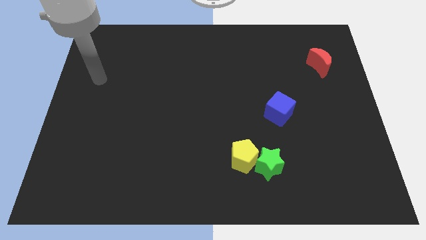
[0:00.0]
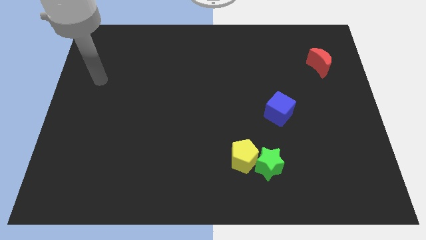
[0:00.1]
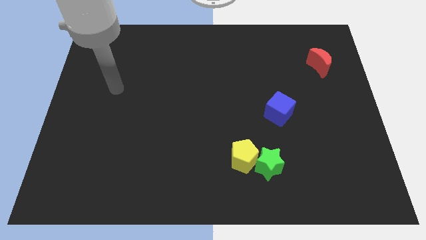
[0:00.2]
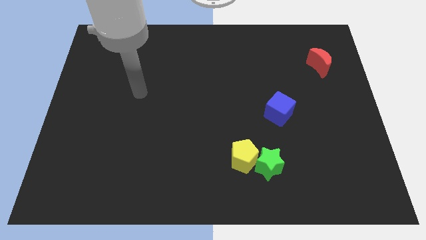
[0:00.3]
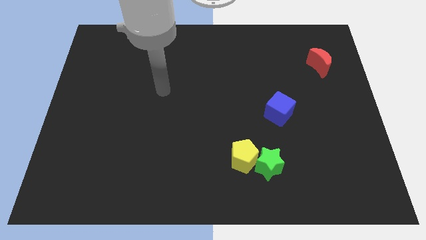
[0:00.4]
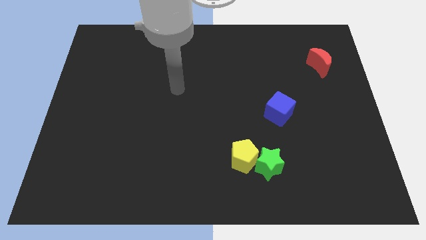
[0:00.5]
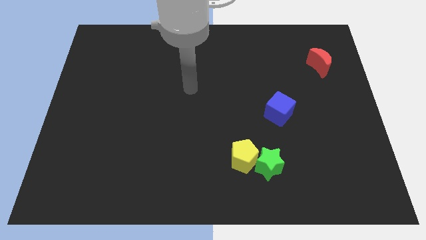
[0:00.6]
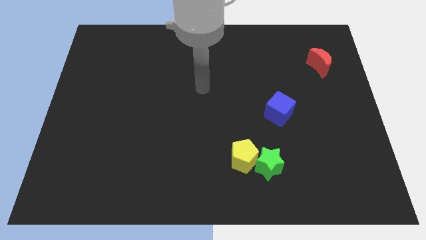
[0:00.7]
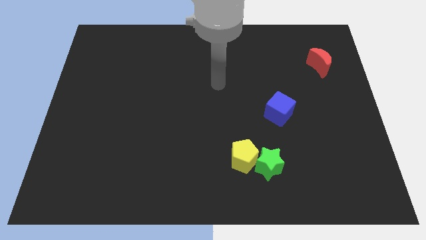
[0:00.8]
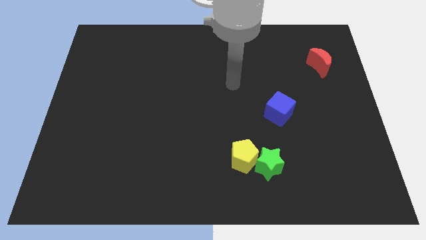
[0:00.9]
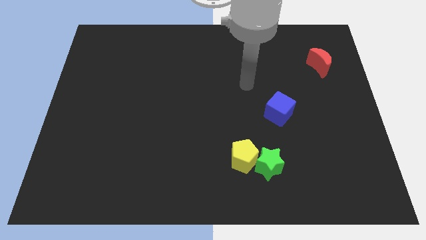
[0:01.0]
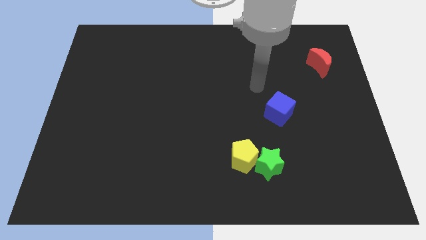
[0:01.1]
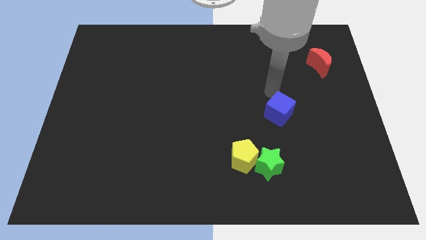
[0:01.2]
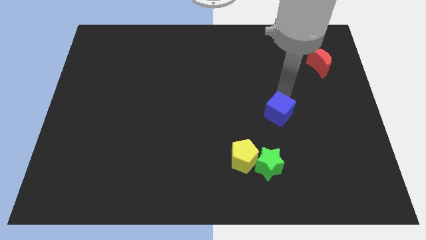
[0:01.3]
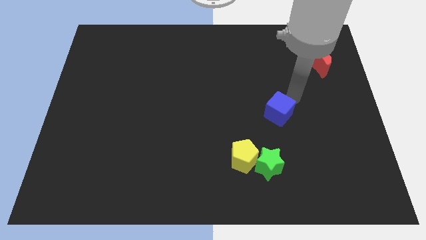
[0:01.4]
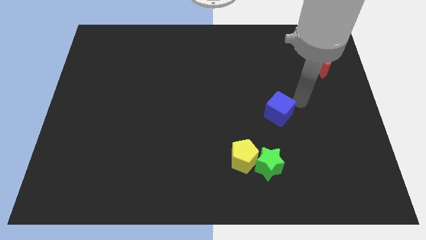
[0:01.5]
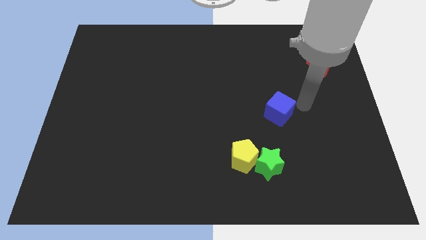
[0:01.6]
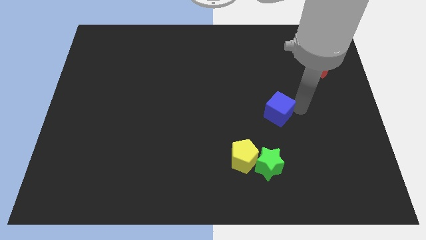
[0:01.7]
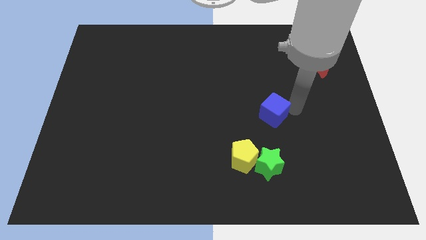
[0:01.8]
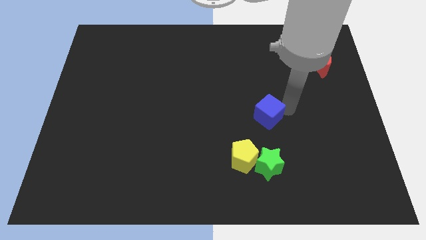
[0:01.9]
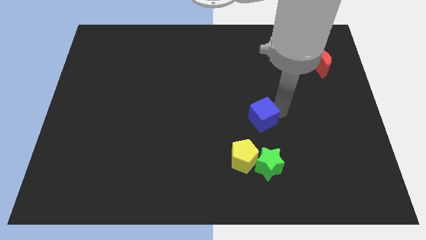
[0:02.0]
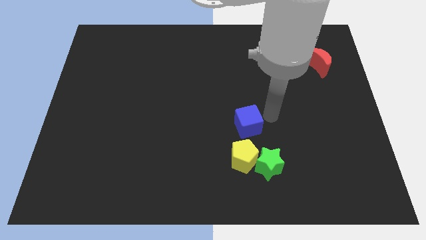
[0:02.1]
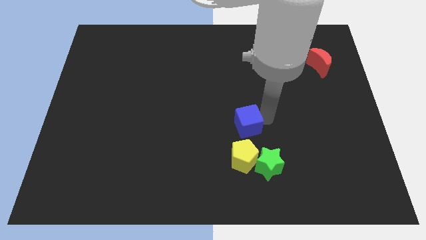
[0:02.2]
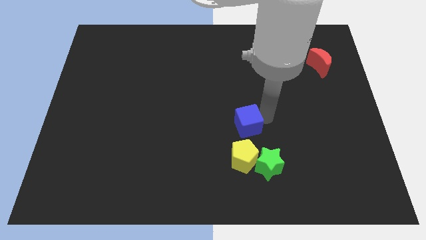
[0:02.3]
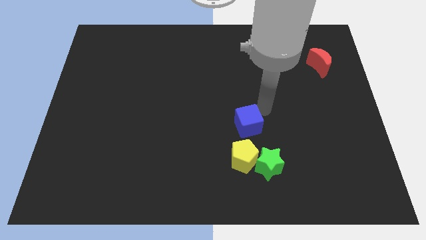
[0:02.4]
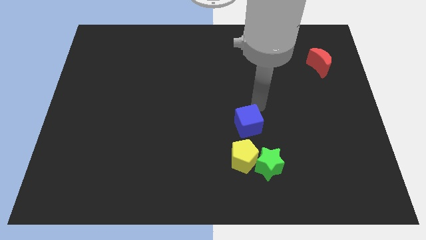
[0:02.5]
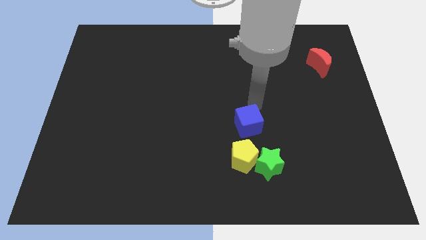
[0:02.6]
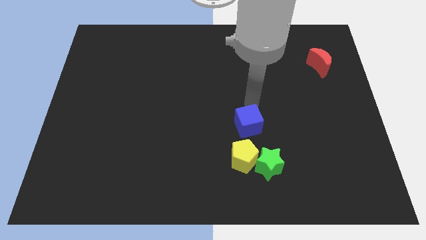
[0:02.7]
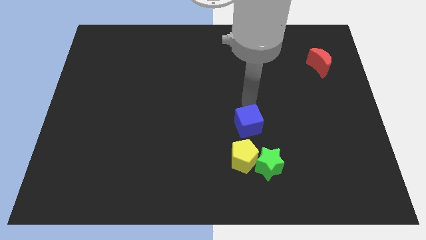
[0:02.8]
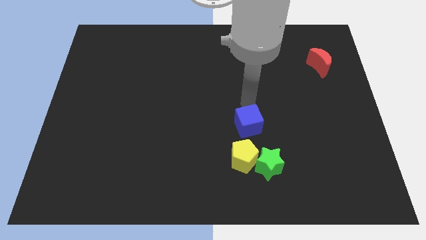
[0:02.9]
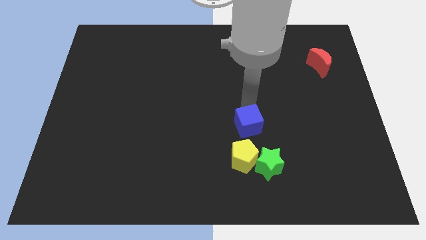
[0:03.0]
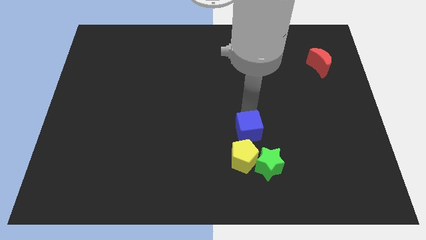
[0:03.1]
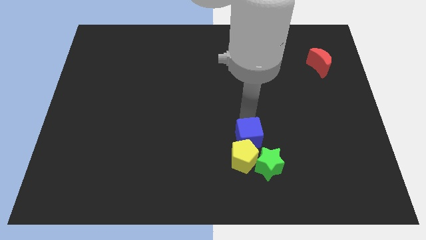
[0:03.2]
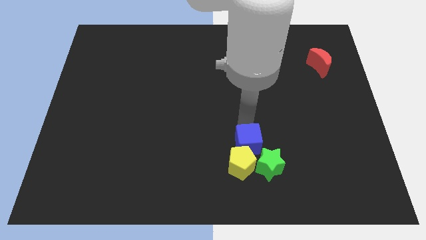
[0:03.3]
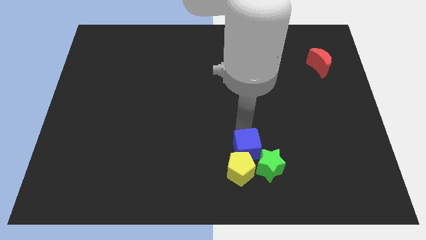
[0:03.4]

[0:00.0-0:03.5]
slide the blue cube close to the pentagon

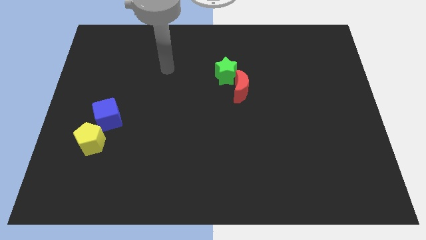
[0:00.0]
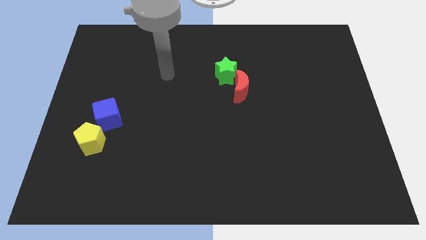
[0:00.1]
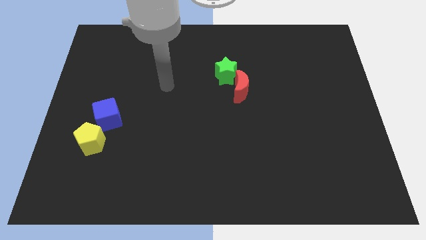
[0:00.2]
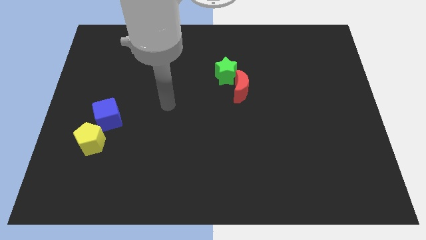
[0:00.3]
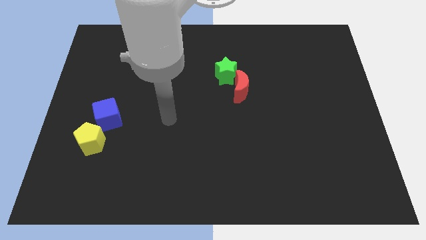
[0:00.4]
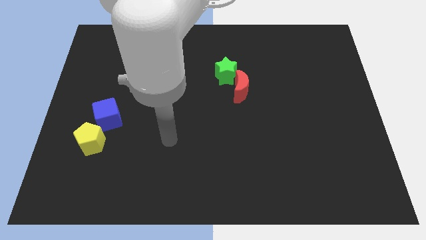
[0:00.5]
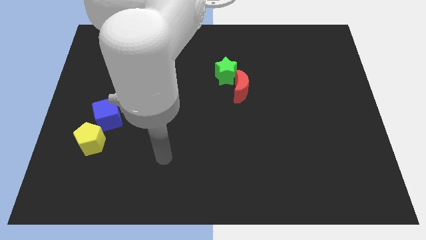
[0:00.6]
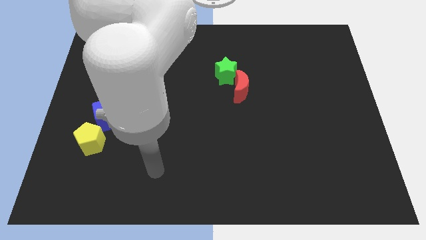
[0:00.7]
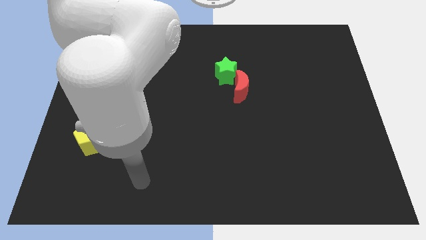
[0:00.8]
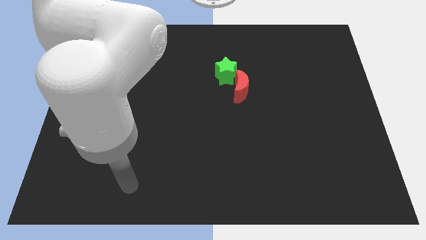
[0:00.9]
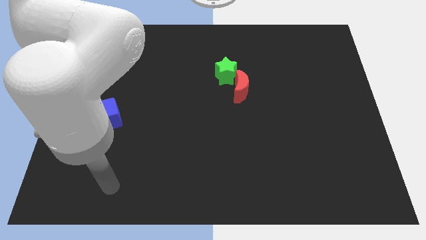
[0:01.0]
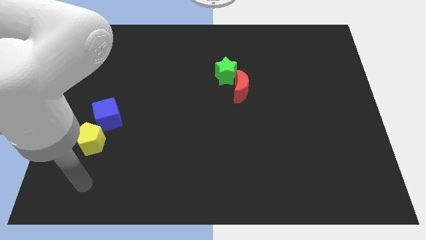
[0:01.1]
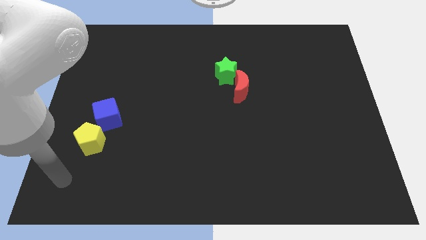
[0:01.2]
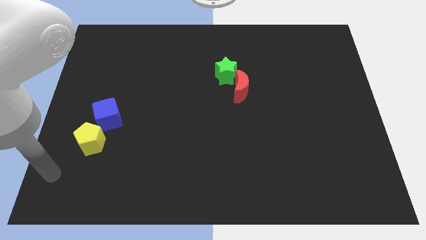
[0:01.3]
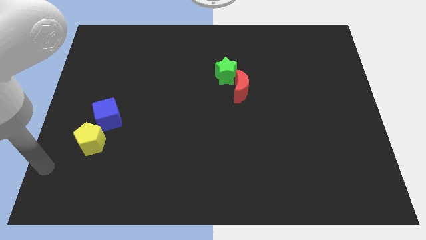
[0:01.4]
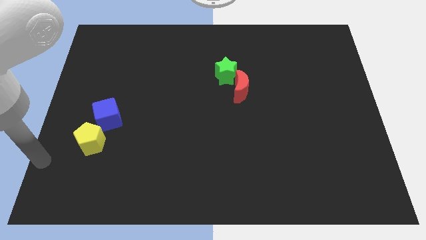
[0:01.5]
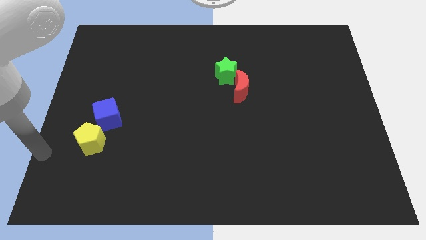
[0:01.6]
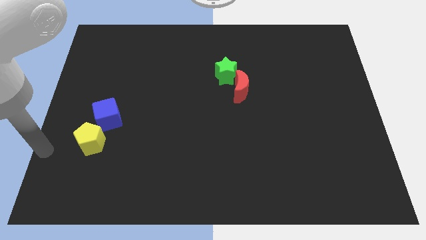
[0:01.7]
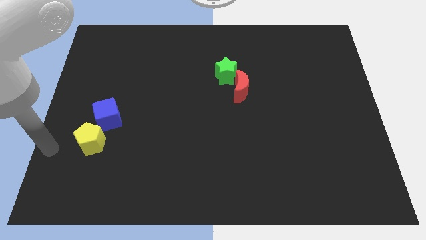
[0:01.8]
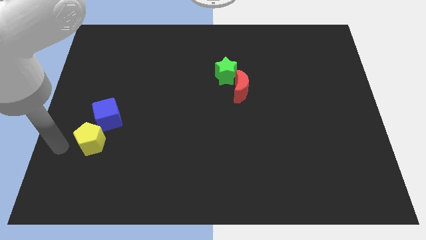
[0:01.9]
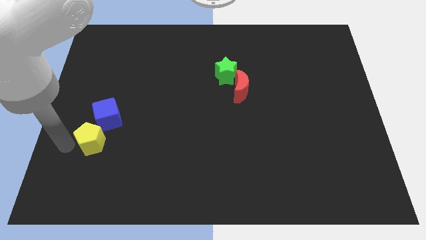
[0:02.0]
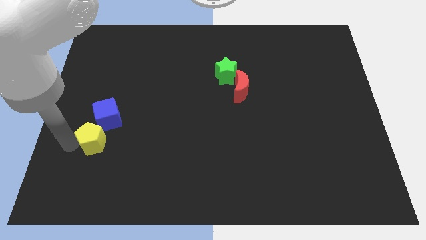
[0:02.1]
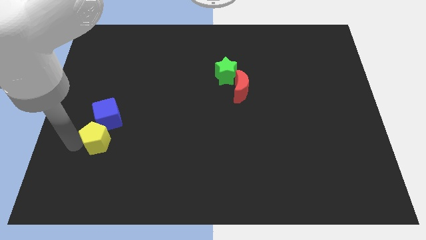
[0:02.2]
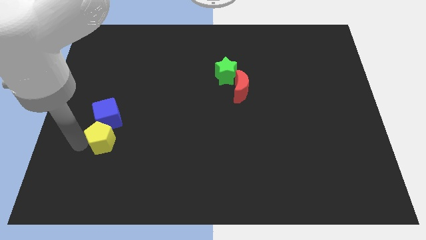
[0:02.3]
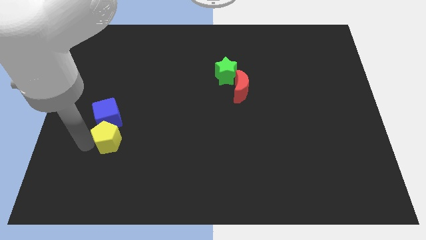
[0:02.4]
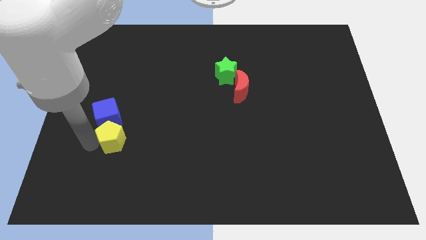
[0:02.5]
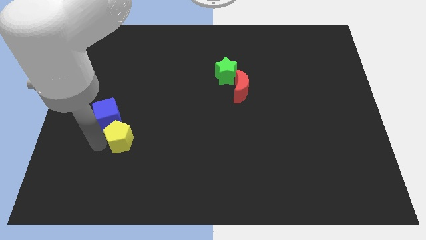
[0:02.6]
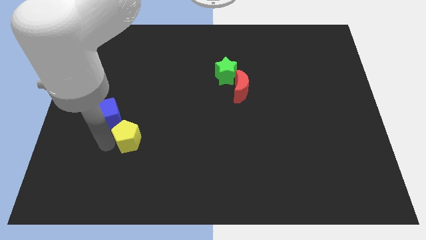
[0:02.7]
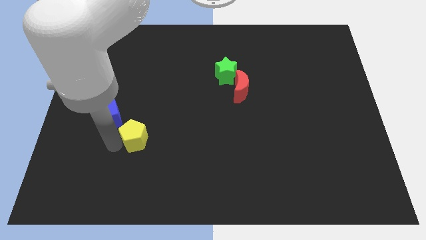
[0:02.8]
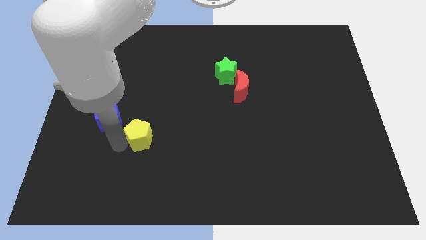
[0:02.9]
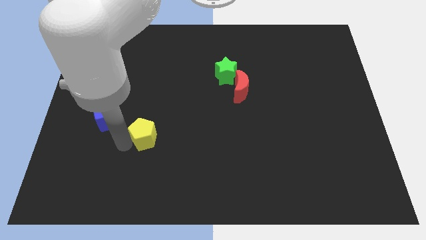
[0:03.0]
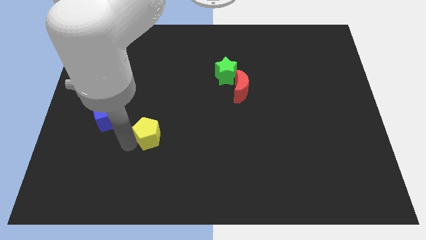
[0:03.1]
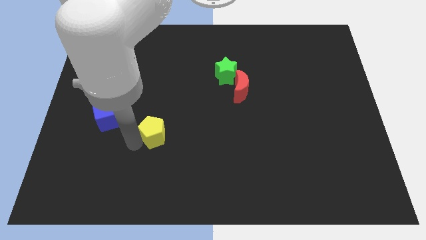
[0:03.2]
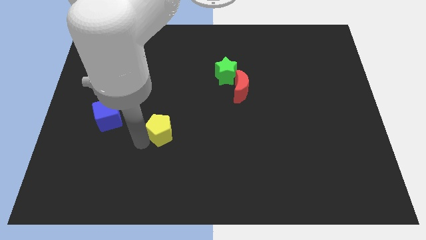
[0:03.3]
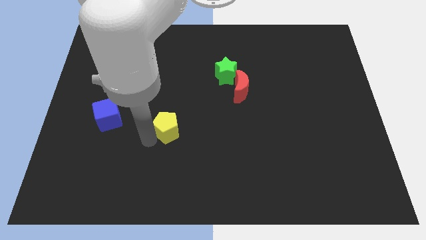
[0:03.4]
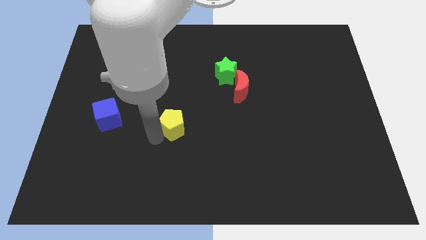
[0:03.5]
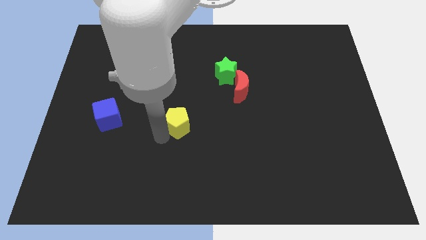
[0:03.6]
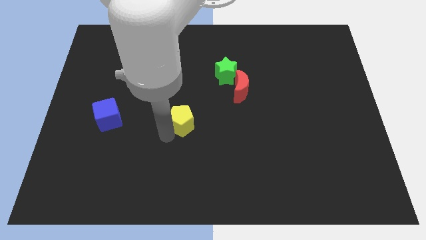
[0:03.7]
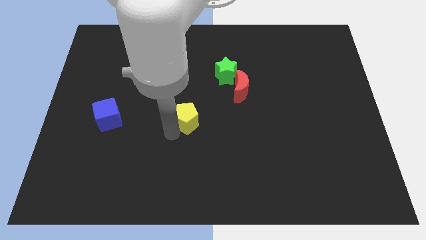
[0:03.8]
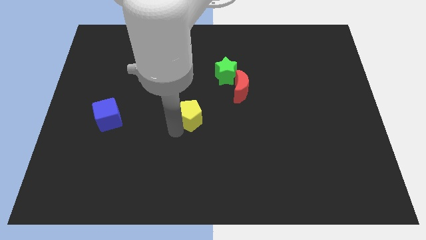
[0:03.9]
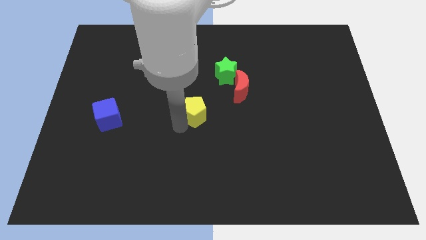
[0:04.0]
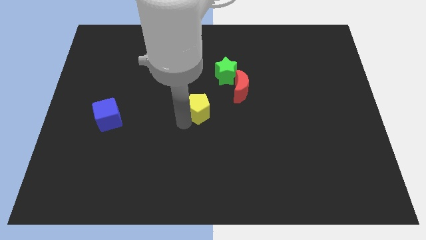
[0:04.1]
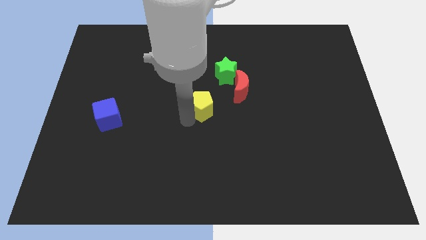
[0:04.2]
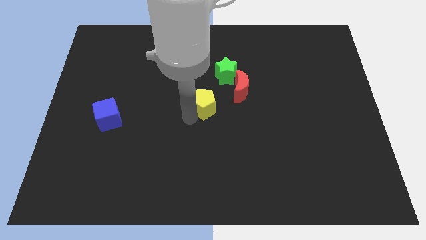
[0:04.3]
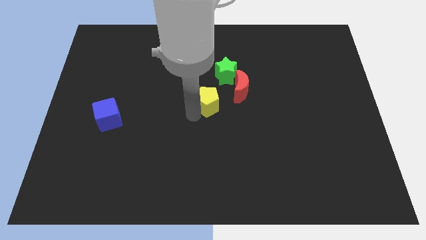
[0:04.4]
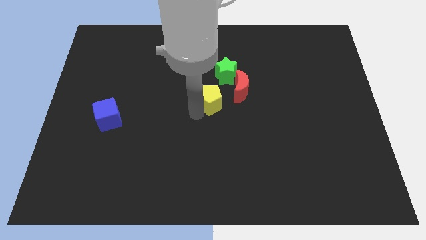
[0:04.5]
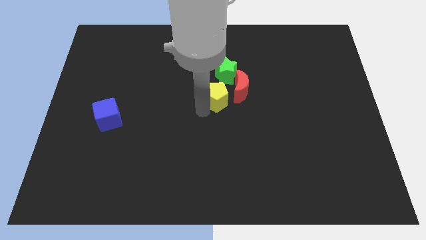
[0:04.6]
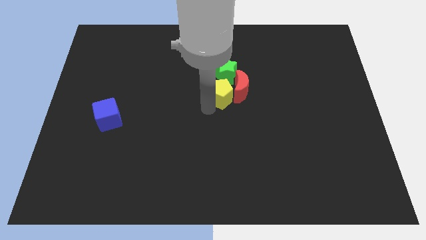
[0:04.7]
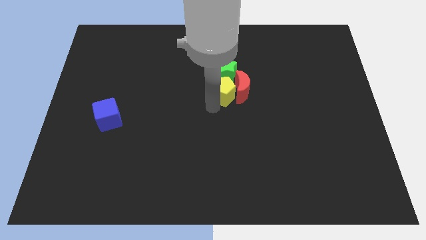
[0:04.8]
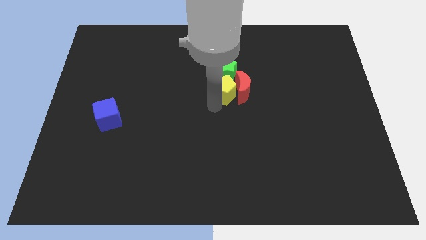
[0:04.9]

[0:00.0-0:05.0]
move the yellow block to the moon

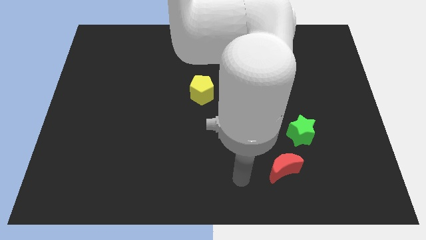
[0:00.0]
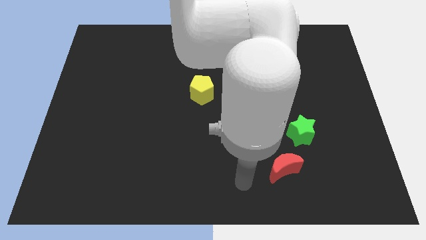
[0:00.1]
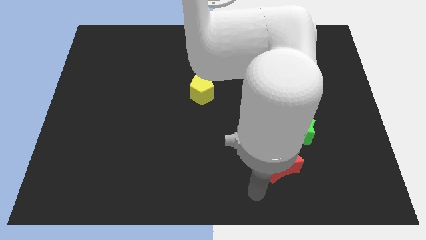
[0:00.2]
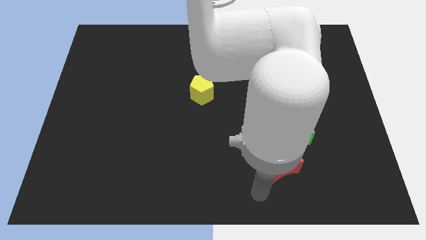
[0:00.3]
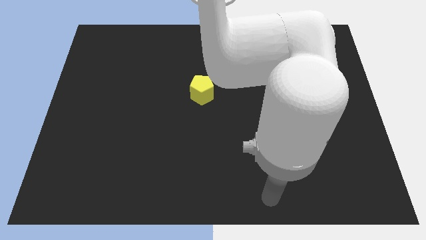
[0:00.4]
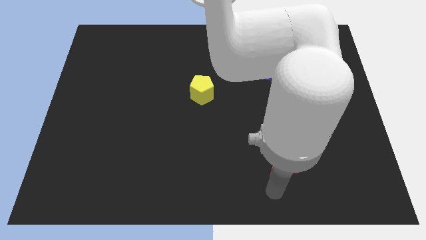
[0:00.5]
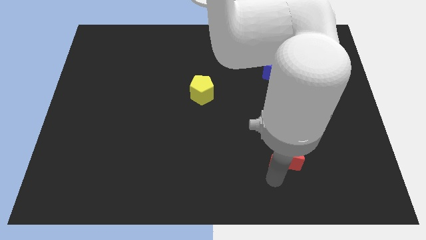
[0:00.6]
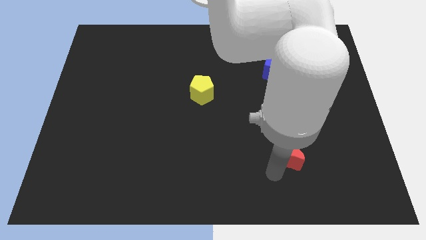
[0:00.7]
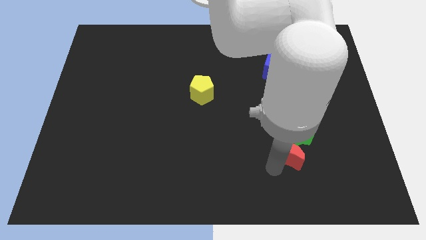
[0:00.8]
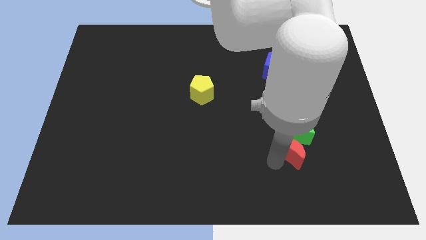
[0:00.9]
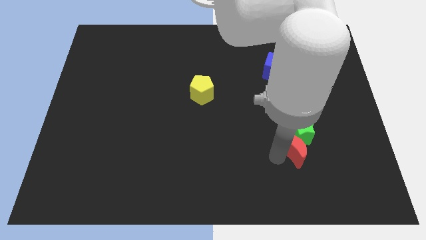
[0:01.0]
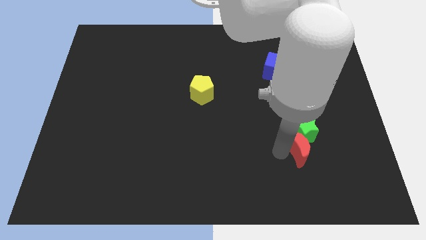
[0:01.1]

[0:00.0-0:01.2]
push the red moon next to the green block
